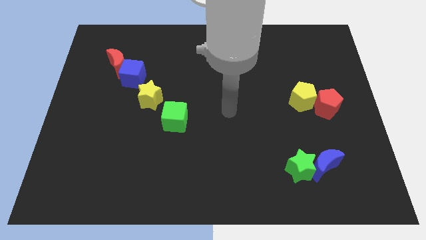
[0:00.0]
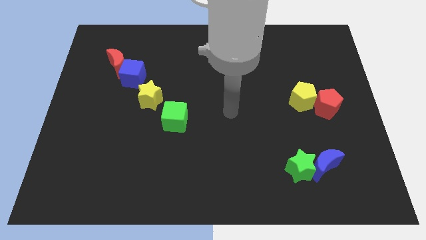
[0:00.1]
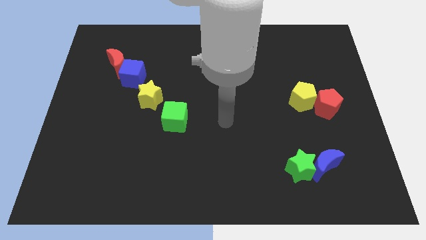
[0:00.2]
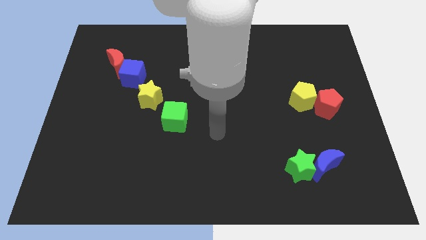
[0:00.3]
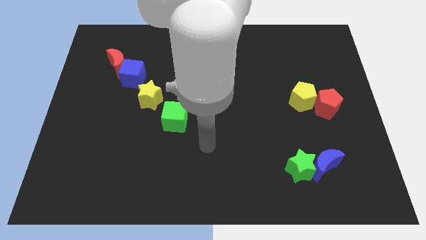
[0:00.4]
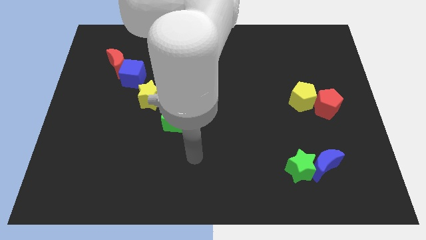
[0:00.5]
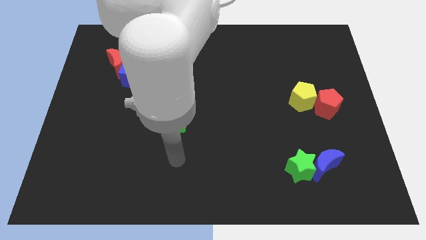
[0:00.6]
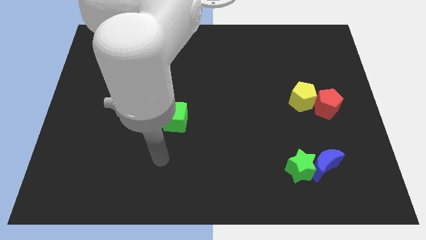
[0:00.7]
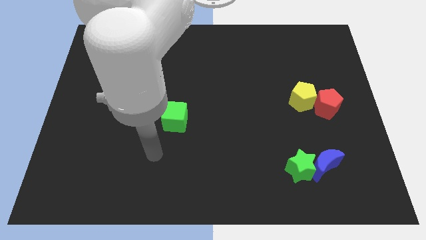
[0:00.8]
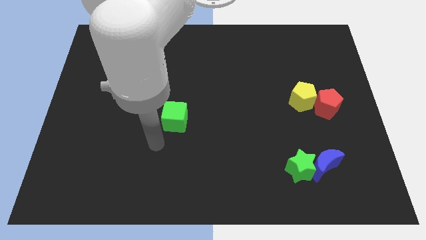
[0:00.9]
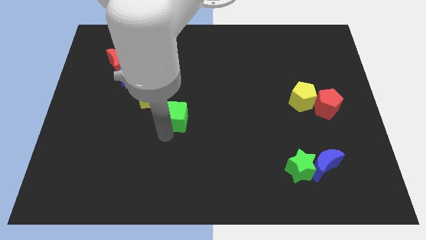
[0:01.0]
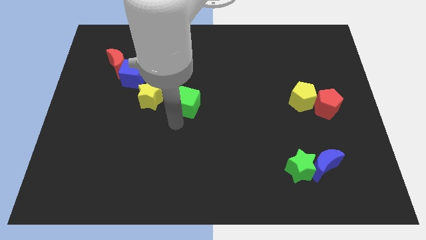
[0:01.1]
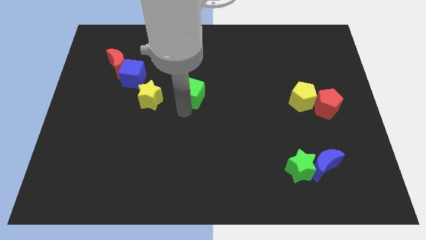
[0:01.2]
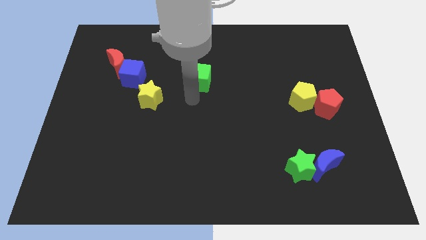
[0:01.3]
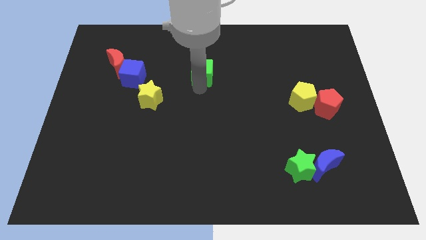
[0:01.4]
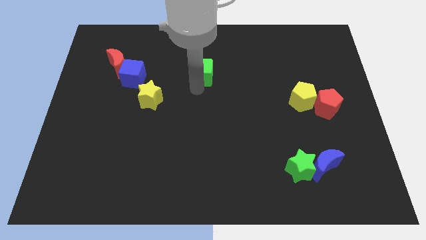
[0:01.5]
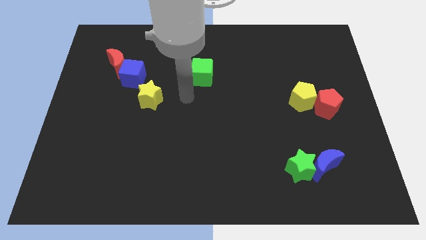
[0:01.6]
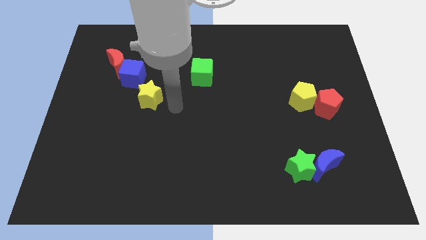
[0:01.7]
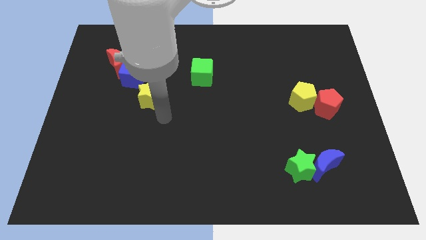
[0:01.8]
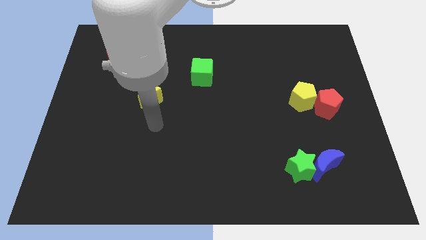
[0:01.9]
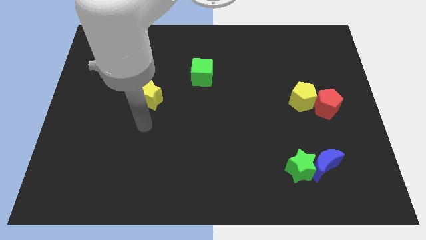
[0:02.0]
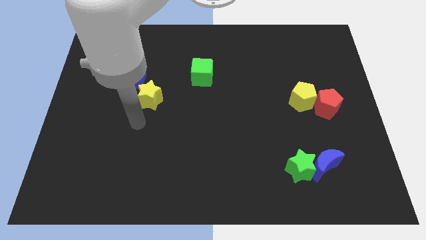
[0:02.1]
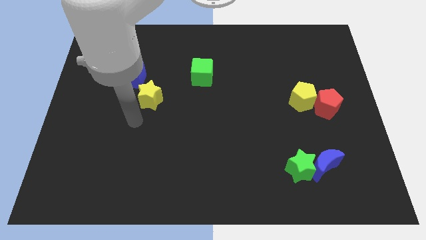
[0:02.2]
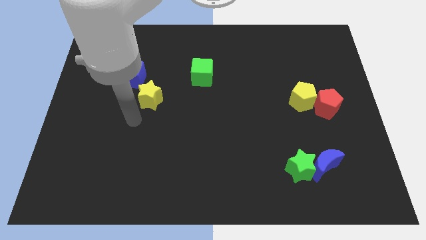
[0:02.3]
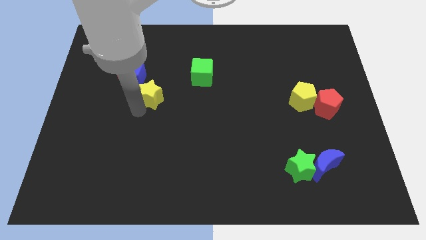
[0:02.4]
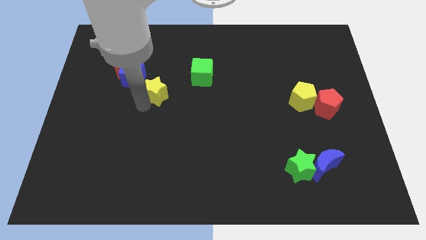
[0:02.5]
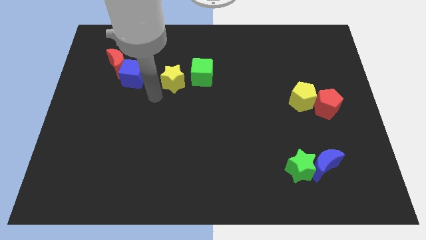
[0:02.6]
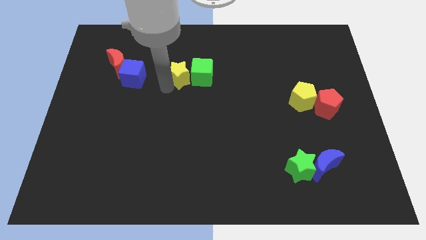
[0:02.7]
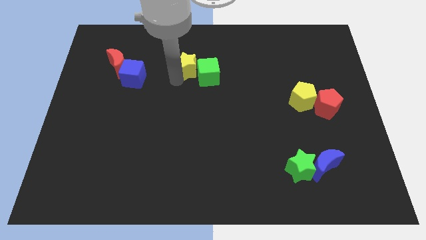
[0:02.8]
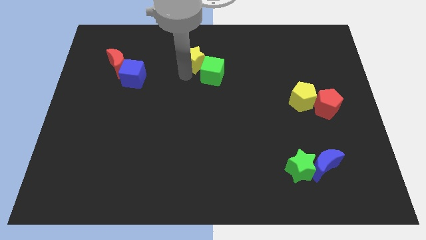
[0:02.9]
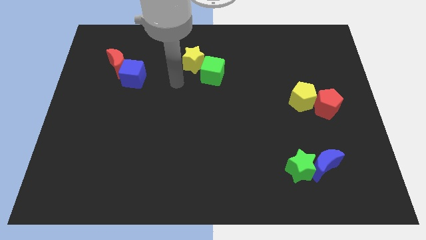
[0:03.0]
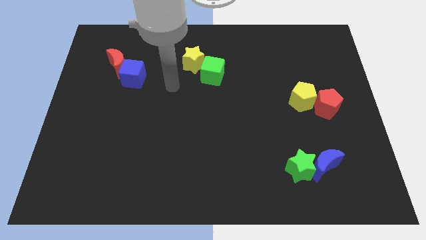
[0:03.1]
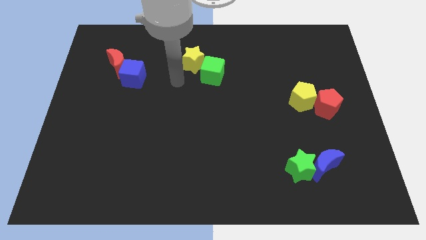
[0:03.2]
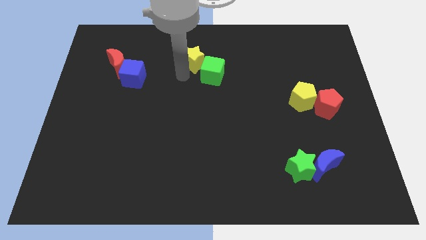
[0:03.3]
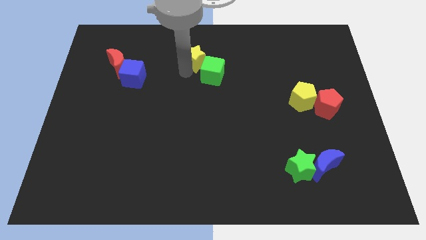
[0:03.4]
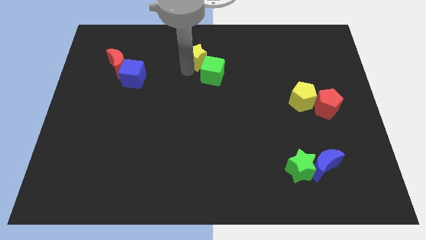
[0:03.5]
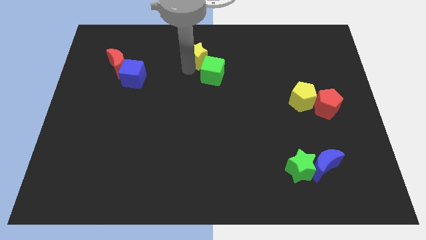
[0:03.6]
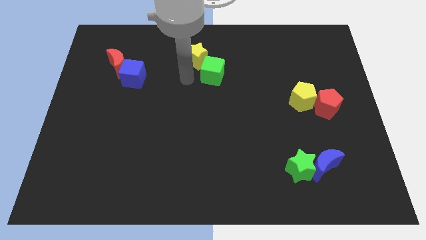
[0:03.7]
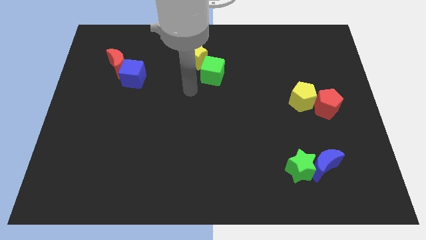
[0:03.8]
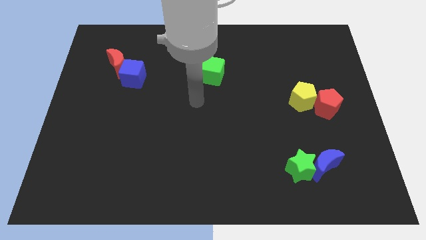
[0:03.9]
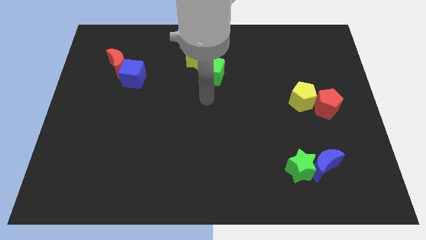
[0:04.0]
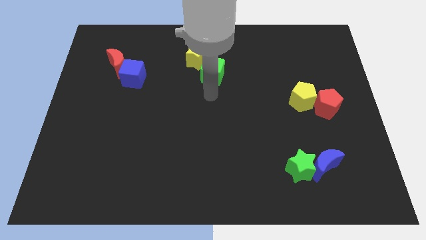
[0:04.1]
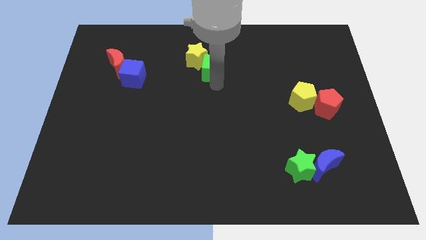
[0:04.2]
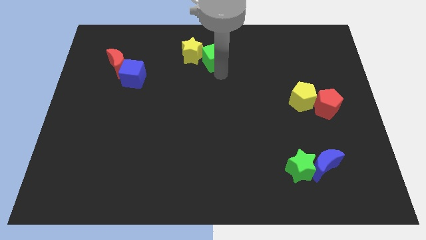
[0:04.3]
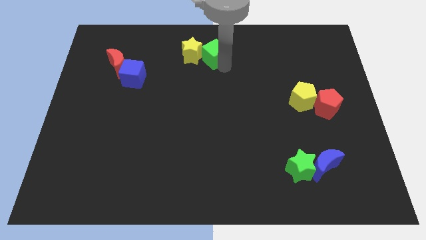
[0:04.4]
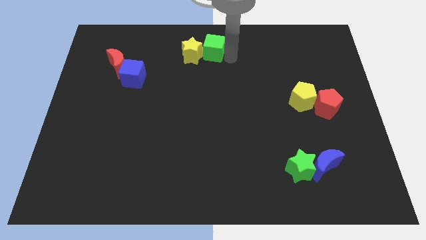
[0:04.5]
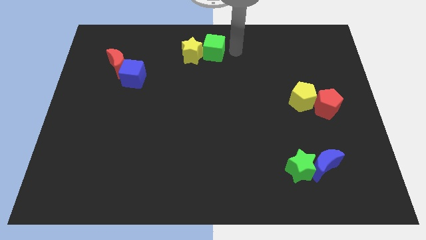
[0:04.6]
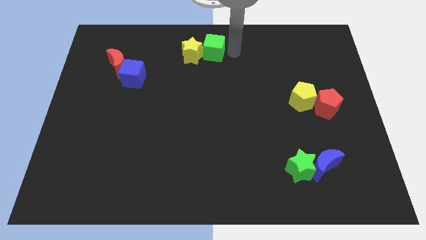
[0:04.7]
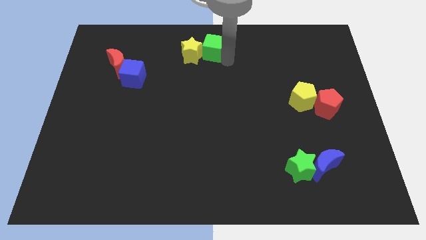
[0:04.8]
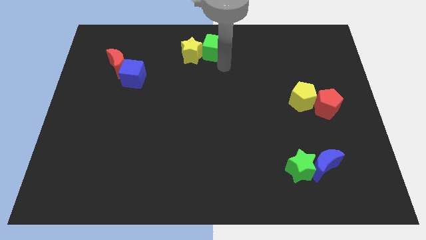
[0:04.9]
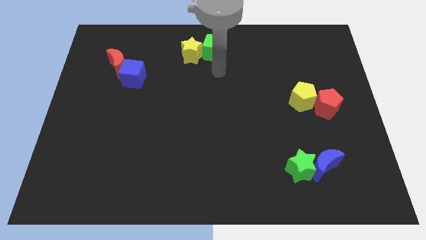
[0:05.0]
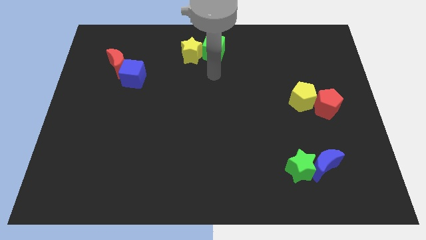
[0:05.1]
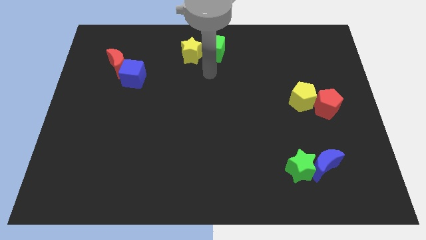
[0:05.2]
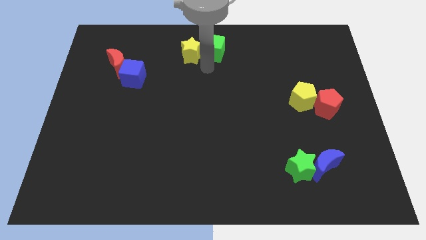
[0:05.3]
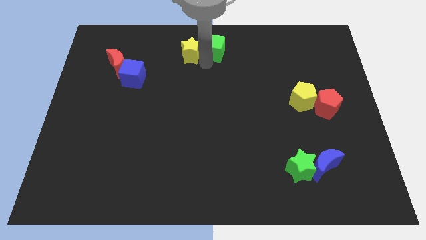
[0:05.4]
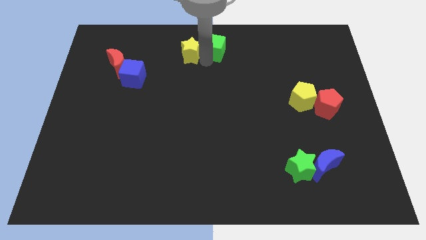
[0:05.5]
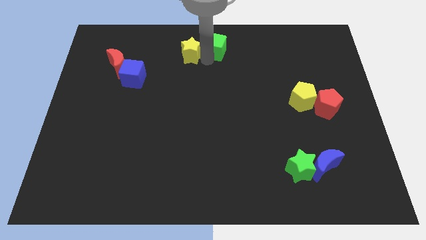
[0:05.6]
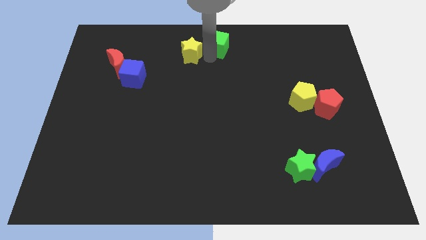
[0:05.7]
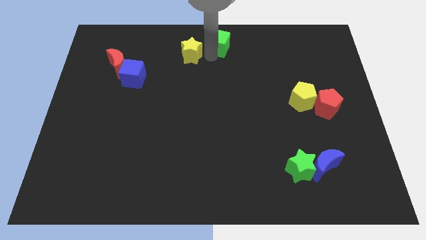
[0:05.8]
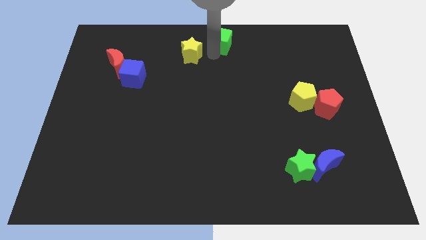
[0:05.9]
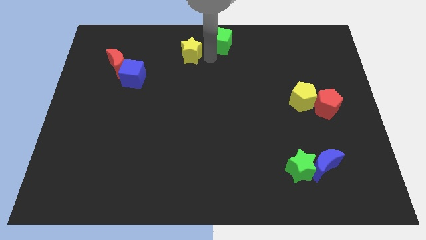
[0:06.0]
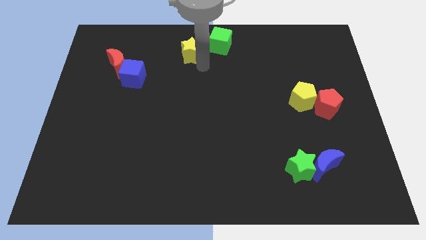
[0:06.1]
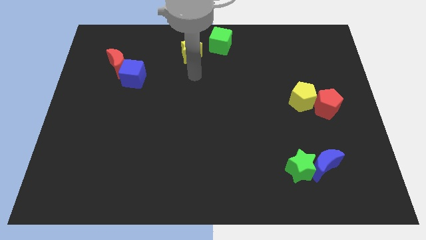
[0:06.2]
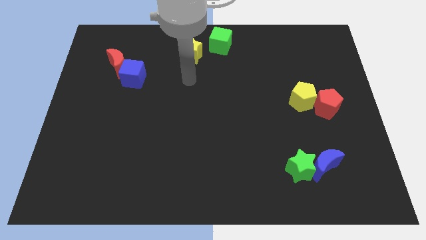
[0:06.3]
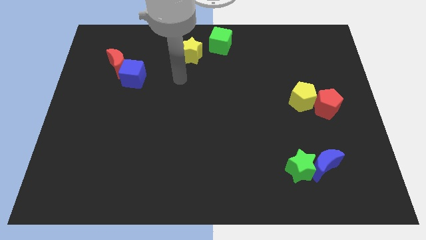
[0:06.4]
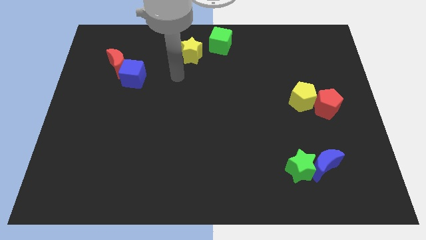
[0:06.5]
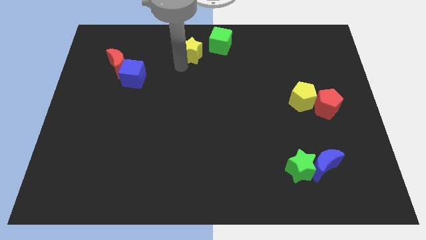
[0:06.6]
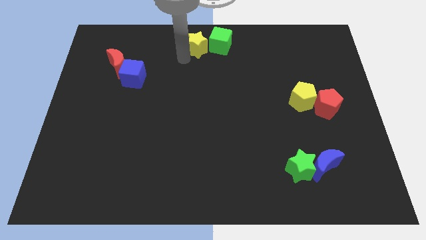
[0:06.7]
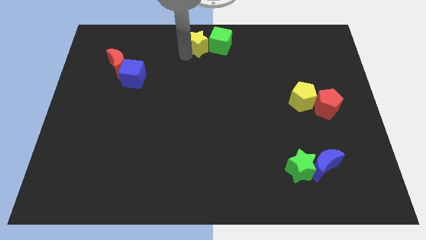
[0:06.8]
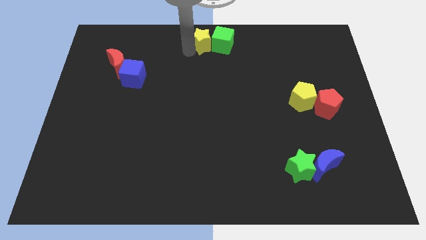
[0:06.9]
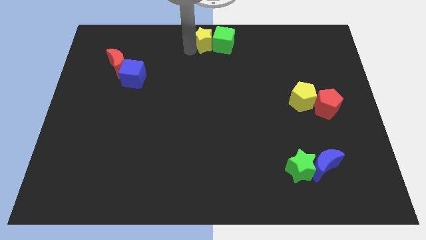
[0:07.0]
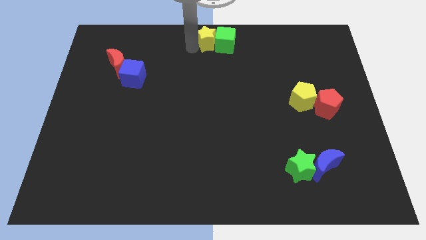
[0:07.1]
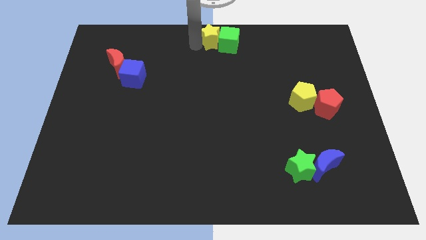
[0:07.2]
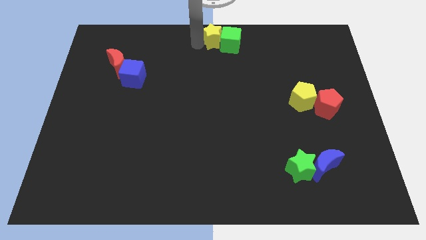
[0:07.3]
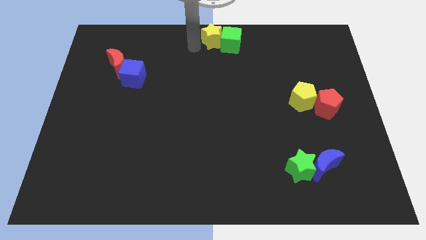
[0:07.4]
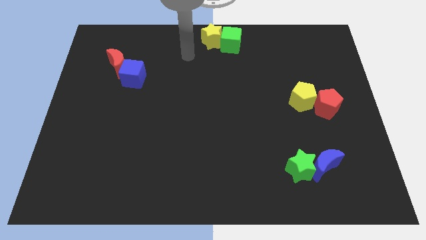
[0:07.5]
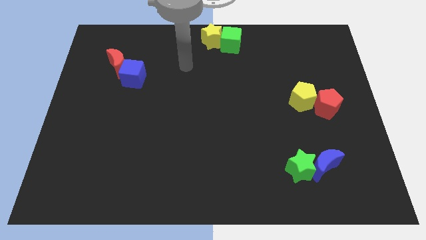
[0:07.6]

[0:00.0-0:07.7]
place the green cube and the yellow star together at the top center of the board

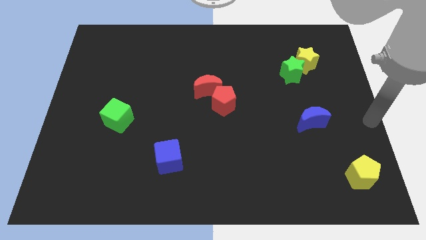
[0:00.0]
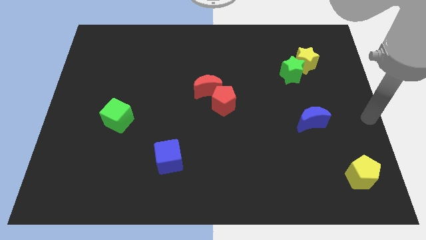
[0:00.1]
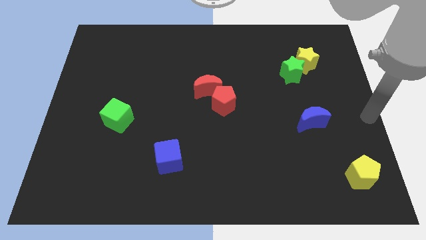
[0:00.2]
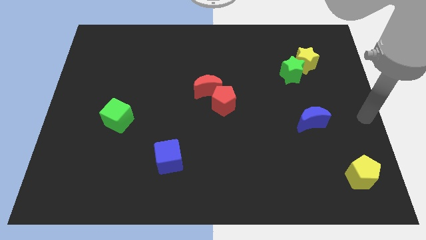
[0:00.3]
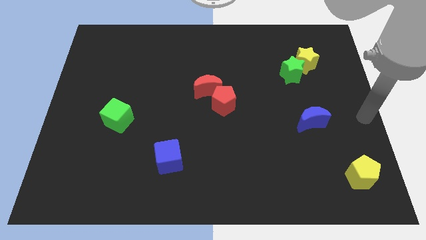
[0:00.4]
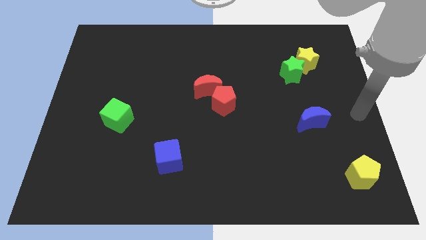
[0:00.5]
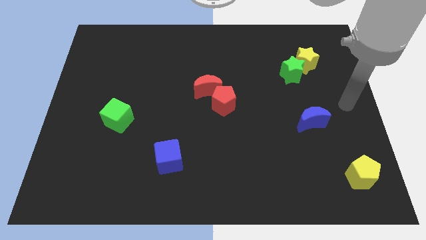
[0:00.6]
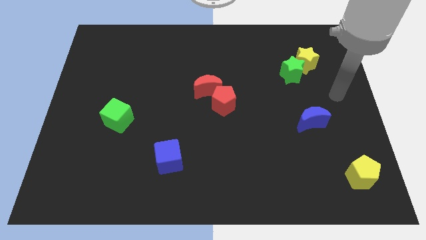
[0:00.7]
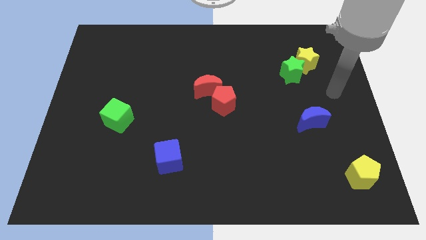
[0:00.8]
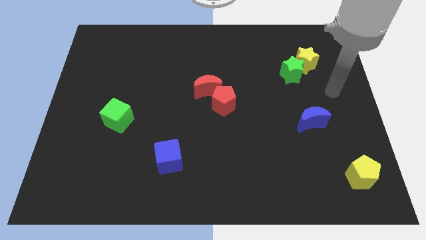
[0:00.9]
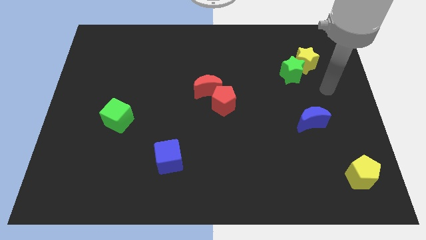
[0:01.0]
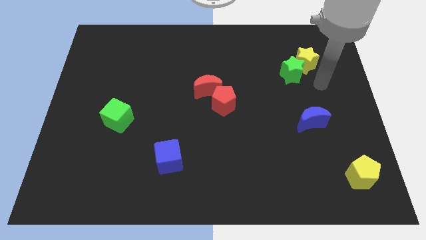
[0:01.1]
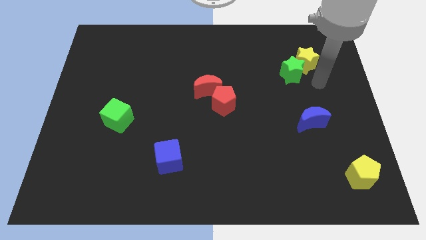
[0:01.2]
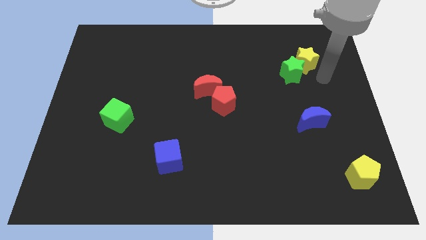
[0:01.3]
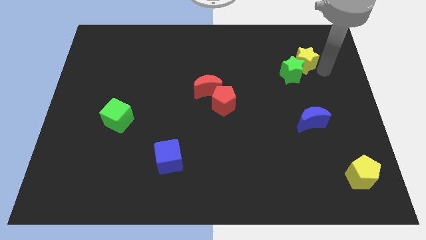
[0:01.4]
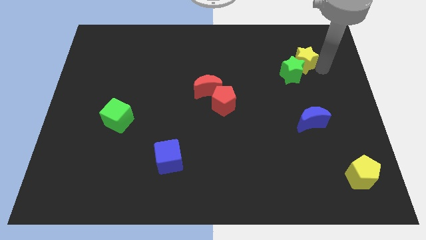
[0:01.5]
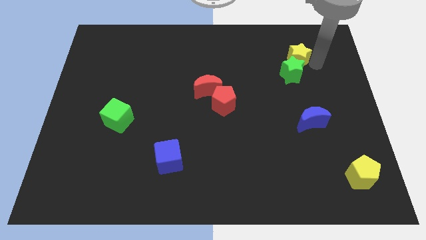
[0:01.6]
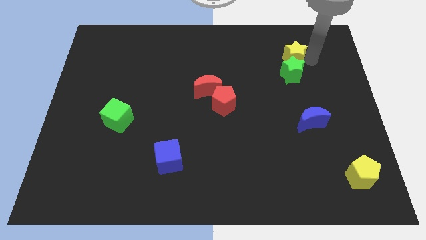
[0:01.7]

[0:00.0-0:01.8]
push the yellow star to the top of the green star
